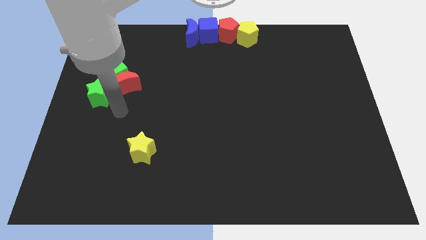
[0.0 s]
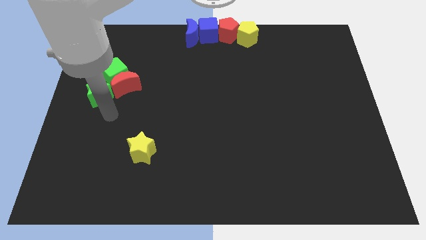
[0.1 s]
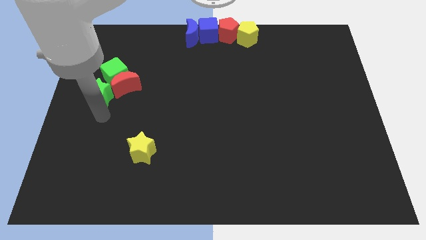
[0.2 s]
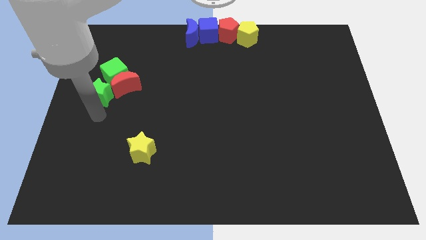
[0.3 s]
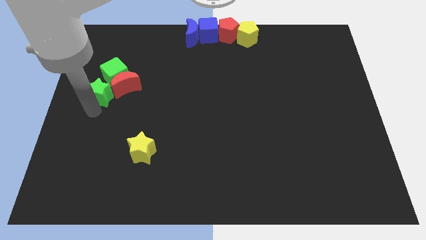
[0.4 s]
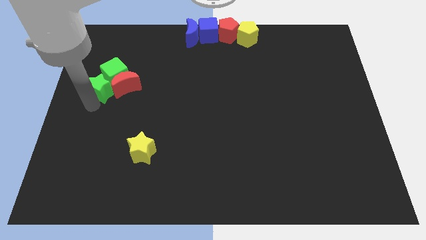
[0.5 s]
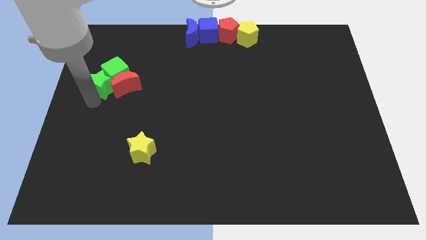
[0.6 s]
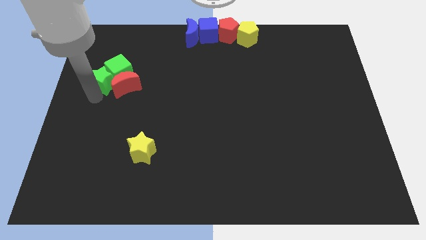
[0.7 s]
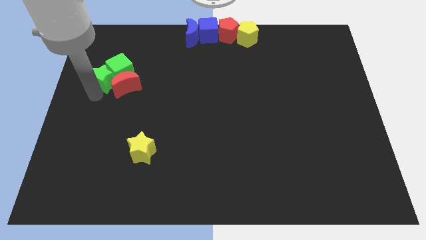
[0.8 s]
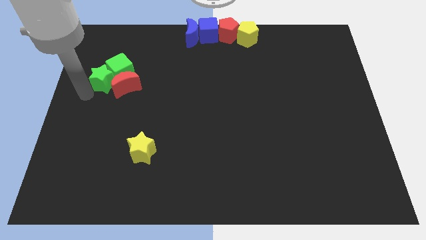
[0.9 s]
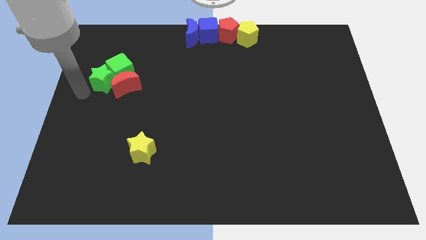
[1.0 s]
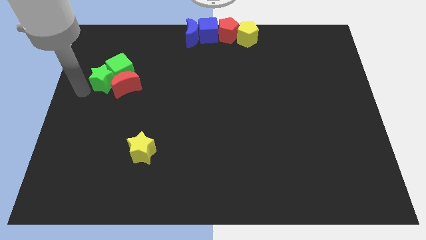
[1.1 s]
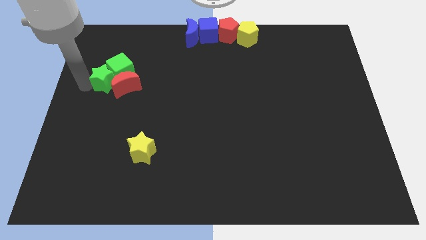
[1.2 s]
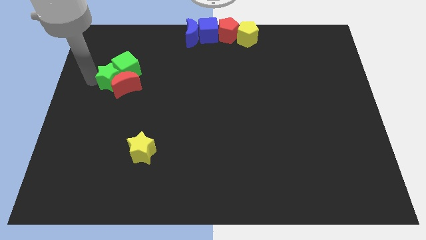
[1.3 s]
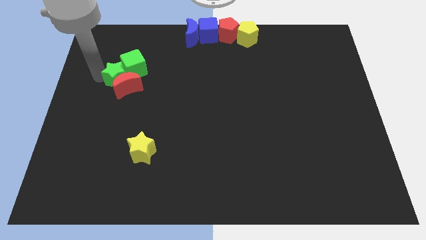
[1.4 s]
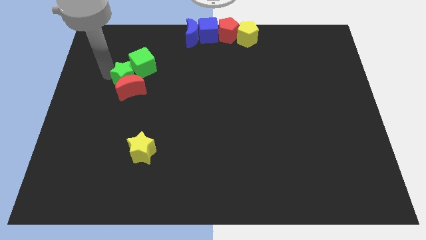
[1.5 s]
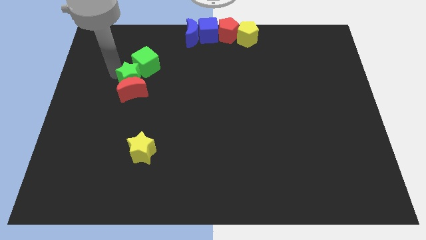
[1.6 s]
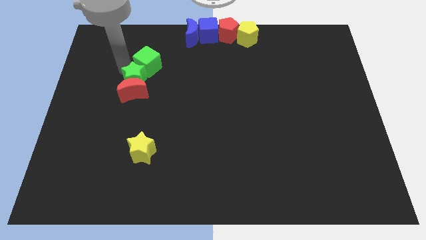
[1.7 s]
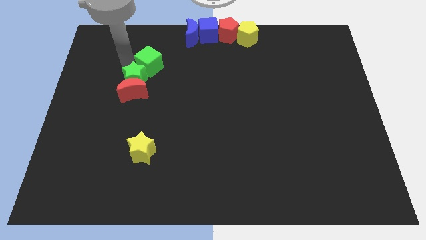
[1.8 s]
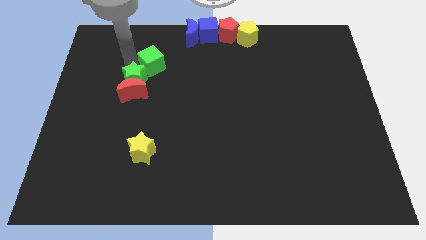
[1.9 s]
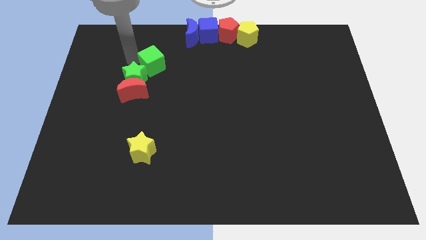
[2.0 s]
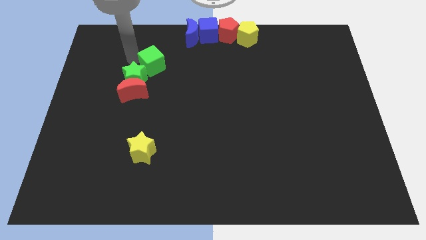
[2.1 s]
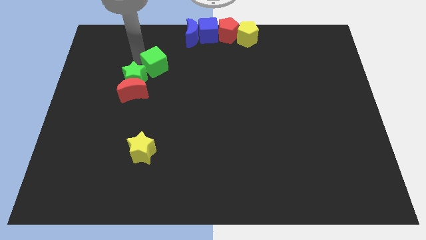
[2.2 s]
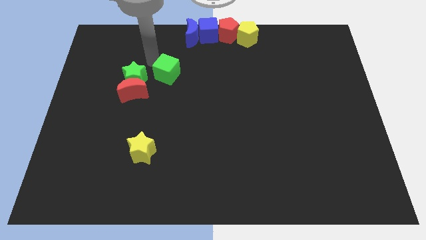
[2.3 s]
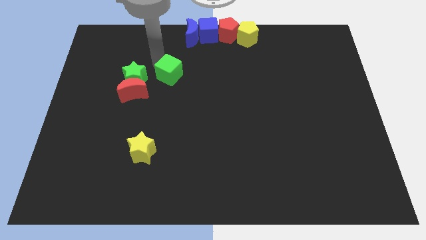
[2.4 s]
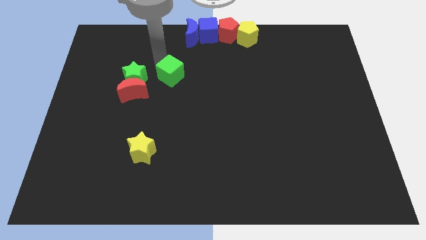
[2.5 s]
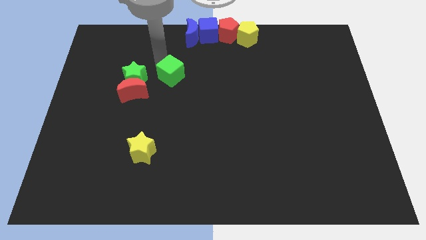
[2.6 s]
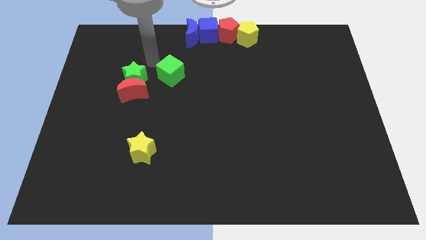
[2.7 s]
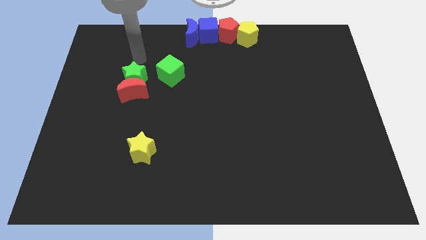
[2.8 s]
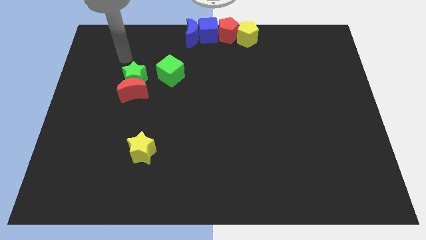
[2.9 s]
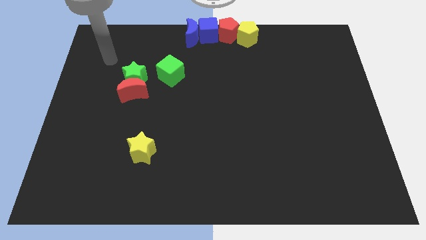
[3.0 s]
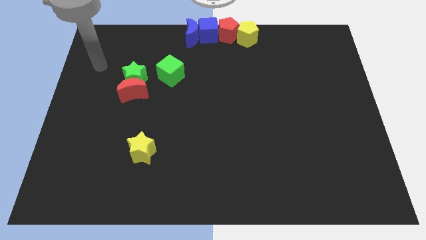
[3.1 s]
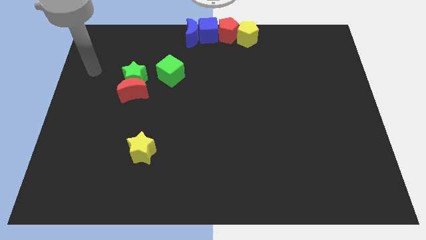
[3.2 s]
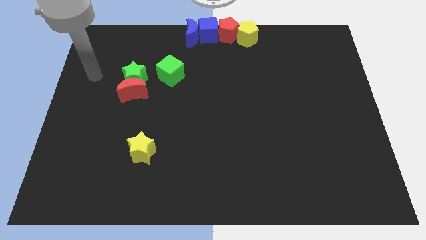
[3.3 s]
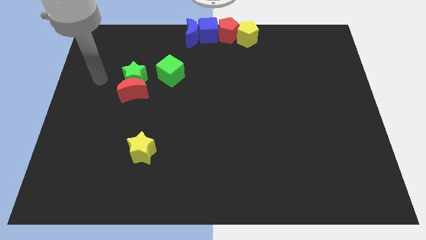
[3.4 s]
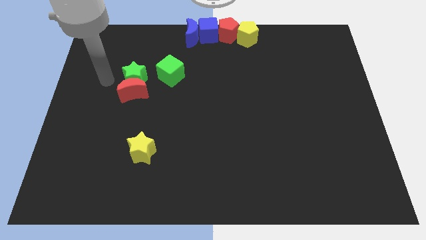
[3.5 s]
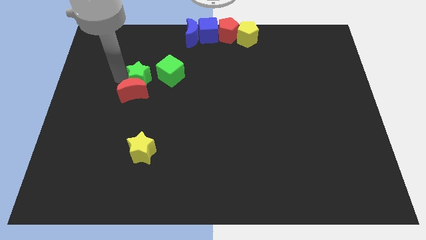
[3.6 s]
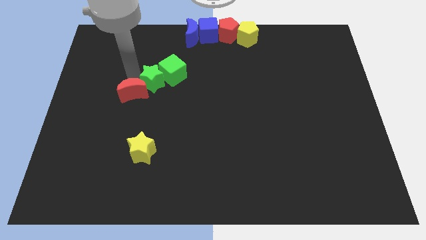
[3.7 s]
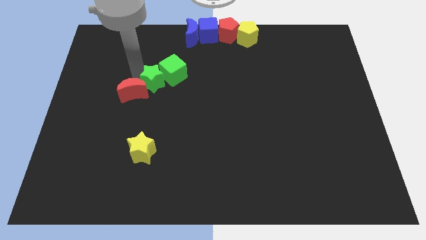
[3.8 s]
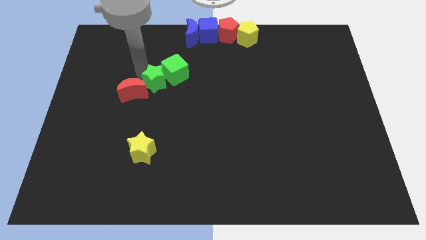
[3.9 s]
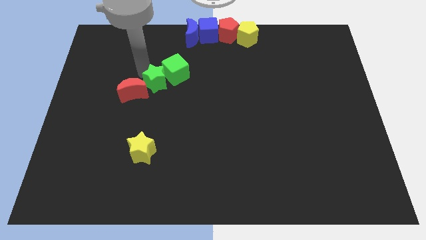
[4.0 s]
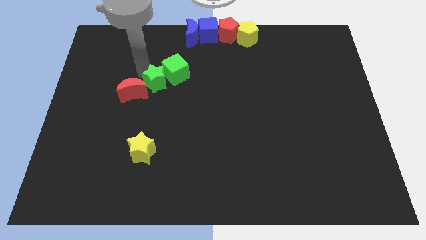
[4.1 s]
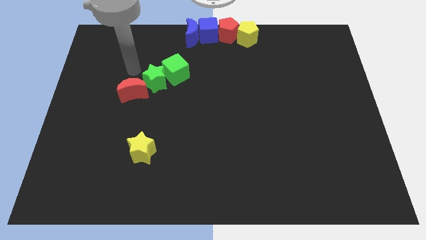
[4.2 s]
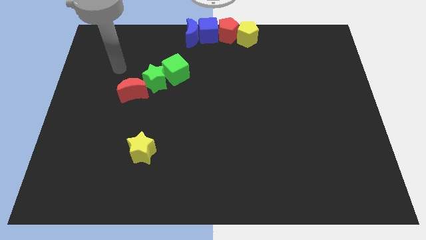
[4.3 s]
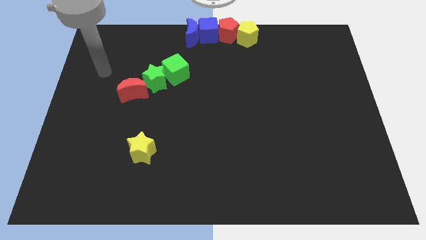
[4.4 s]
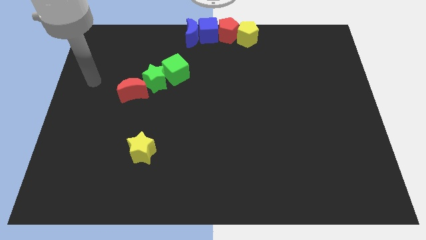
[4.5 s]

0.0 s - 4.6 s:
move the green cube and green star diagonally at the top right side of the red moon

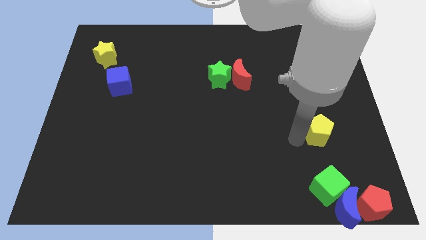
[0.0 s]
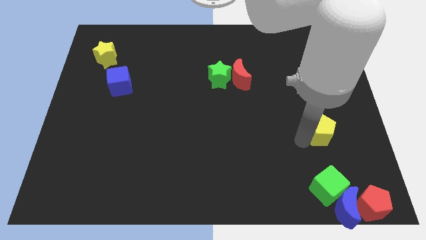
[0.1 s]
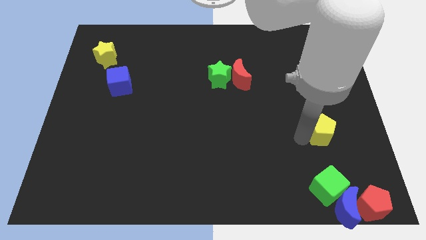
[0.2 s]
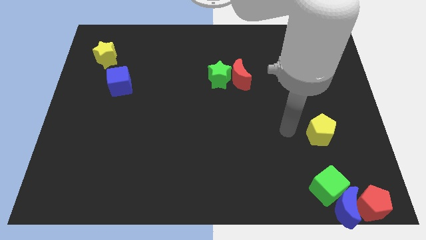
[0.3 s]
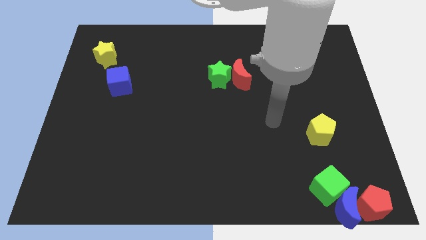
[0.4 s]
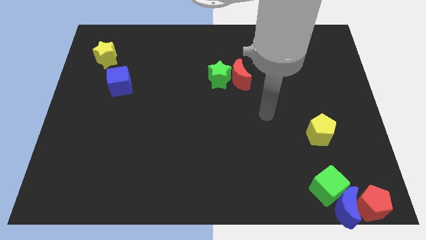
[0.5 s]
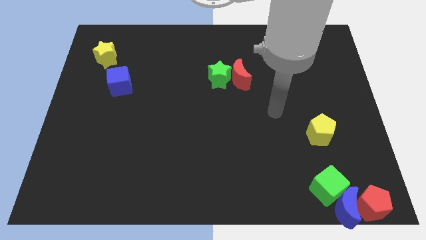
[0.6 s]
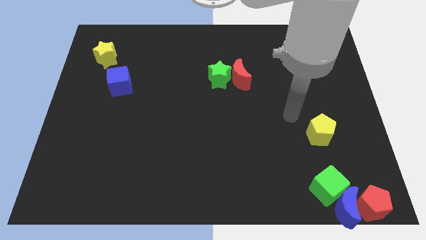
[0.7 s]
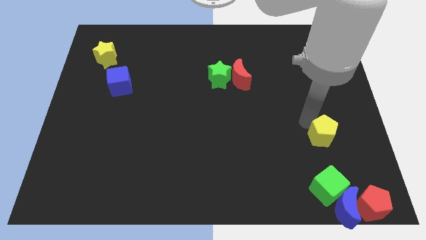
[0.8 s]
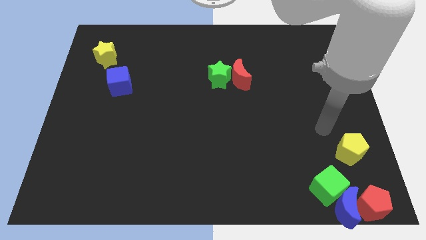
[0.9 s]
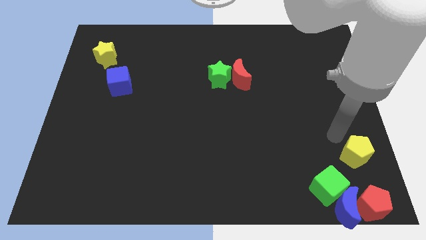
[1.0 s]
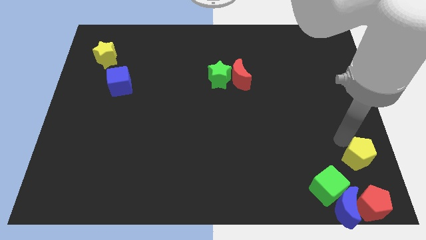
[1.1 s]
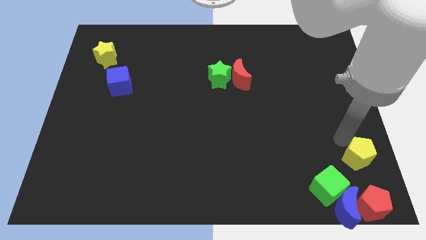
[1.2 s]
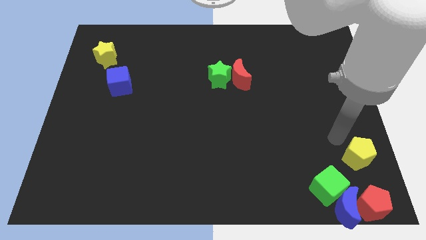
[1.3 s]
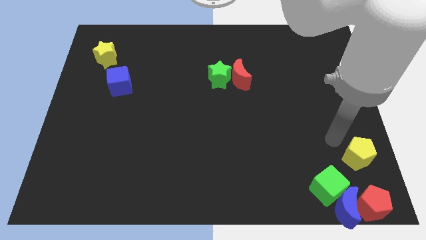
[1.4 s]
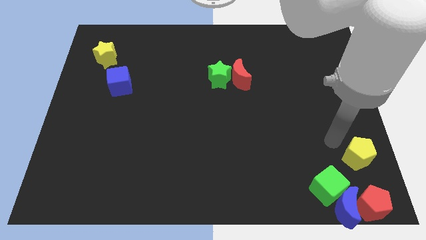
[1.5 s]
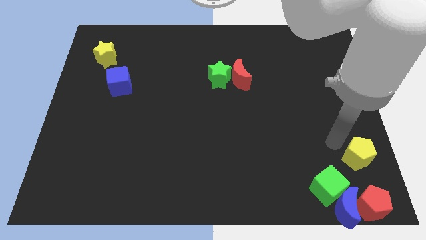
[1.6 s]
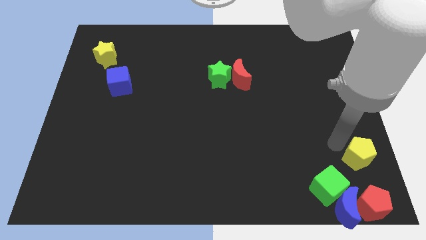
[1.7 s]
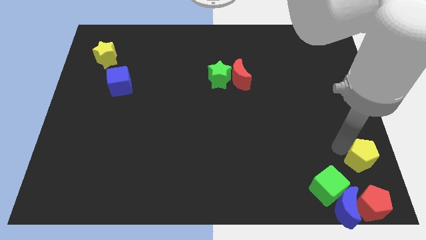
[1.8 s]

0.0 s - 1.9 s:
push the yellow pentagon towards the red pentagon

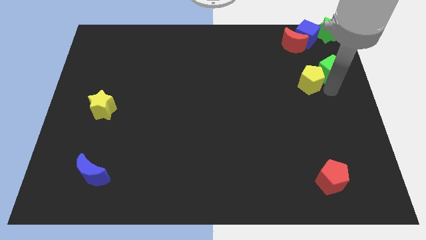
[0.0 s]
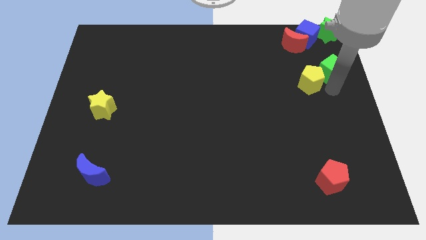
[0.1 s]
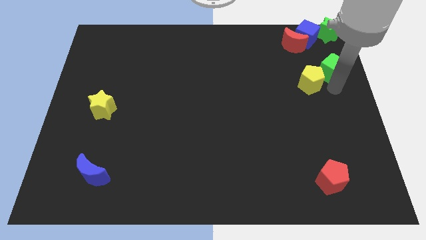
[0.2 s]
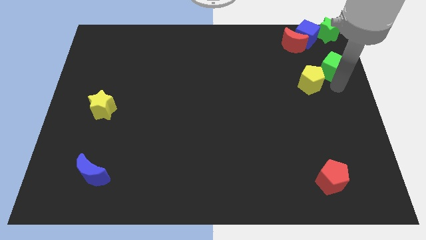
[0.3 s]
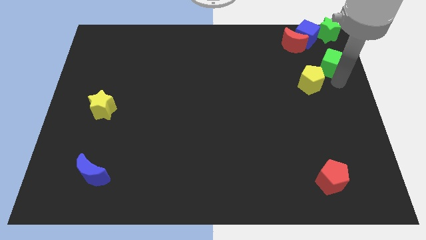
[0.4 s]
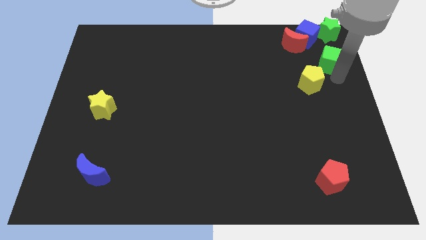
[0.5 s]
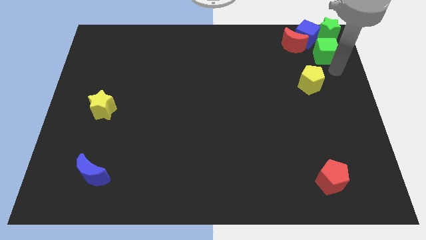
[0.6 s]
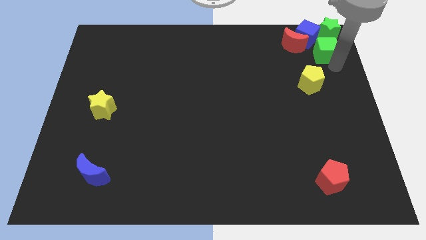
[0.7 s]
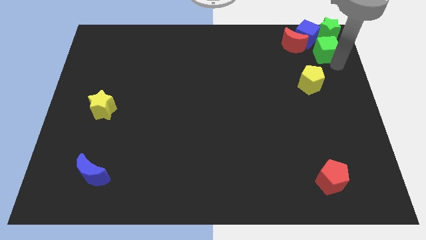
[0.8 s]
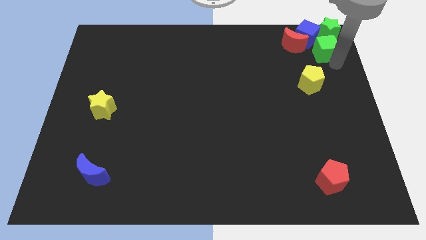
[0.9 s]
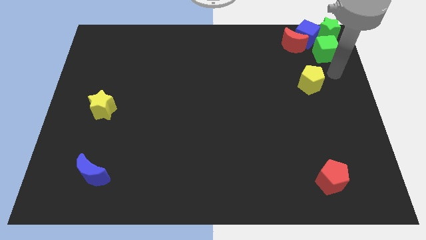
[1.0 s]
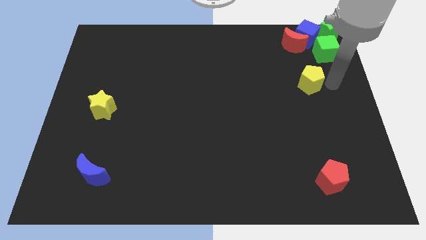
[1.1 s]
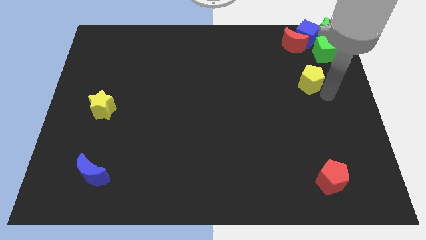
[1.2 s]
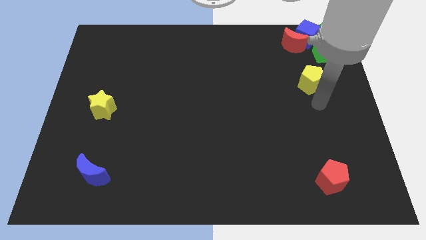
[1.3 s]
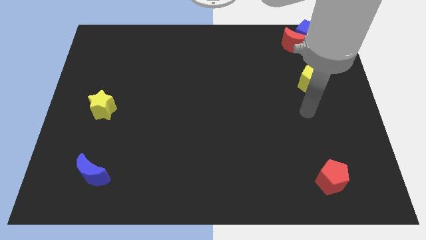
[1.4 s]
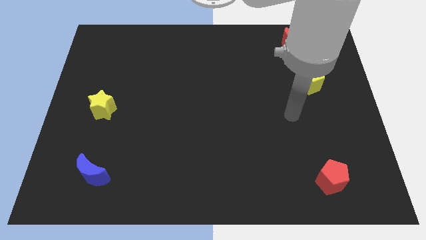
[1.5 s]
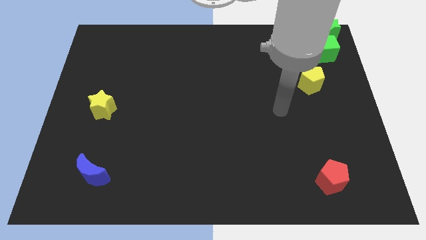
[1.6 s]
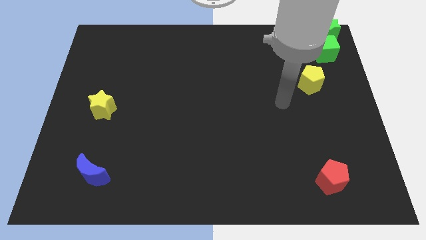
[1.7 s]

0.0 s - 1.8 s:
move the green cube to the top right of the board

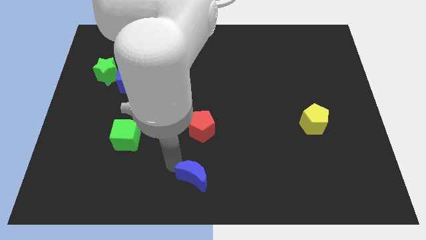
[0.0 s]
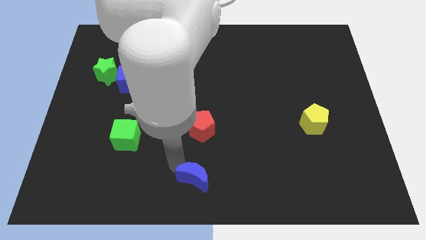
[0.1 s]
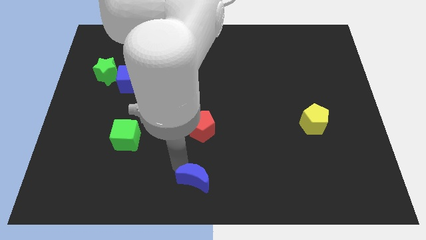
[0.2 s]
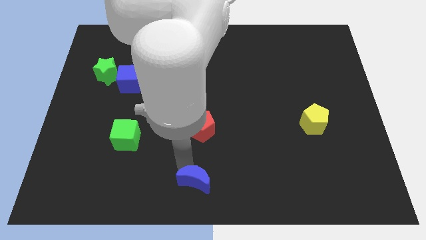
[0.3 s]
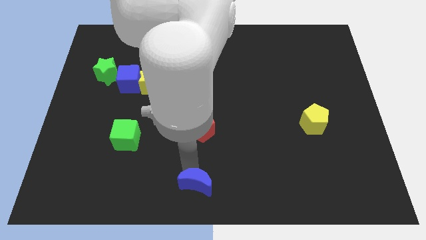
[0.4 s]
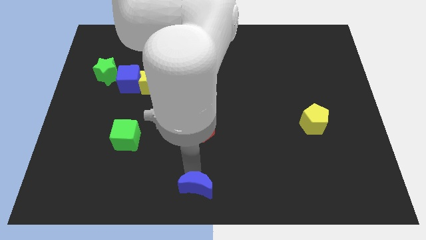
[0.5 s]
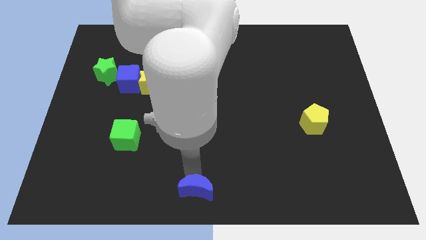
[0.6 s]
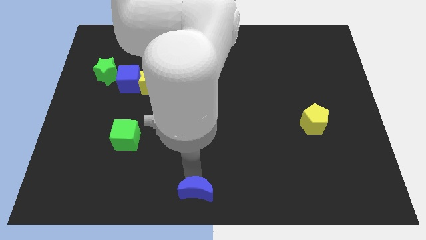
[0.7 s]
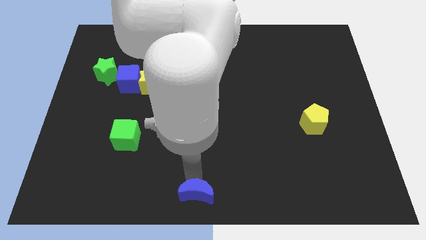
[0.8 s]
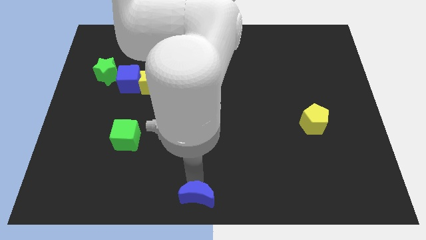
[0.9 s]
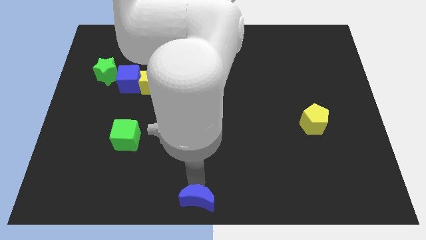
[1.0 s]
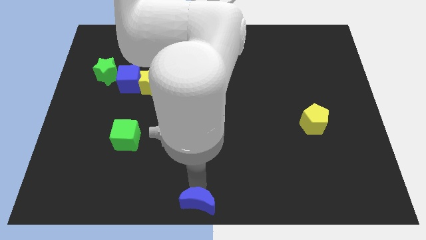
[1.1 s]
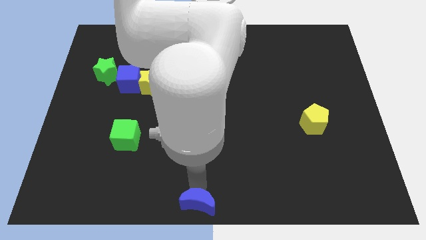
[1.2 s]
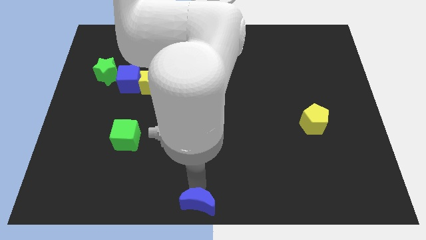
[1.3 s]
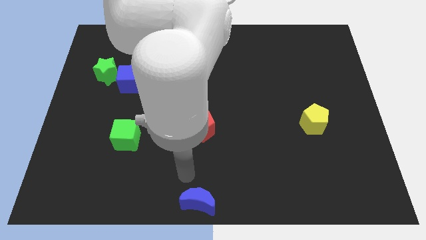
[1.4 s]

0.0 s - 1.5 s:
move the blue crescent to the bottom center of the board
